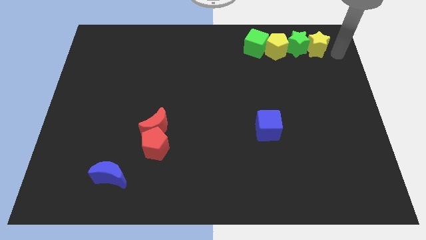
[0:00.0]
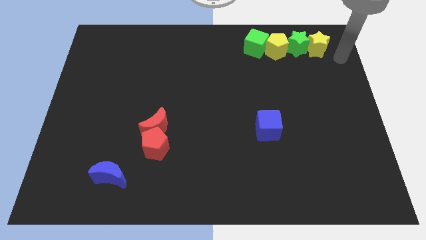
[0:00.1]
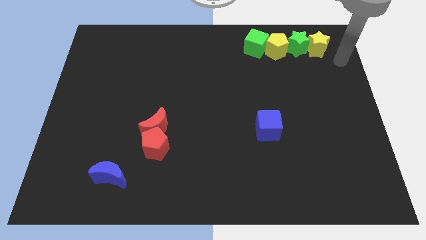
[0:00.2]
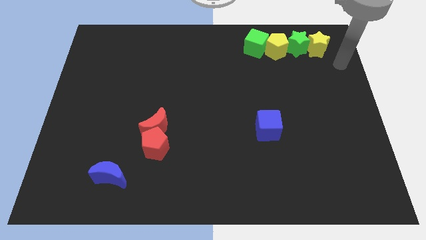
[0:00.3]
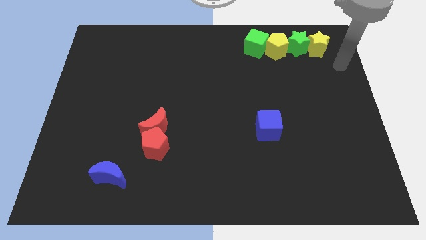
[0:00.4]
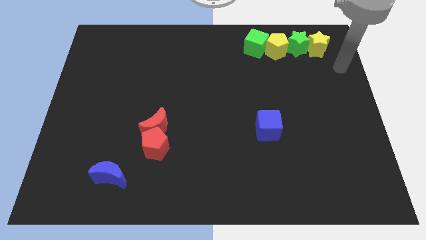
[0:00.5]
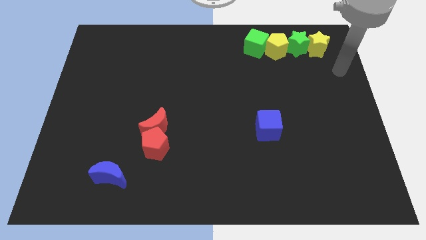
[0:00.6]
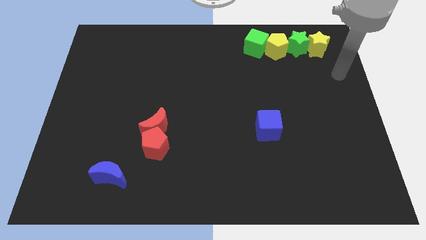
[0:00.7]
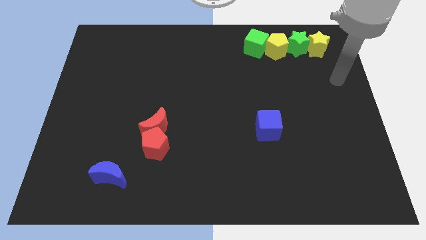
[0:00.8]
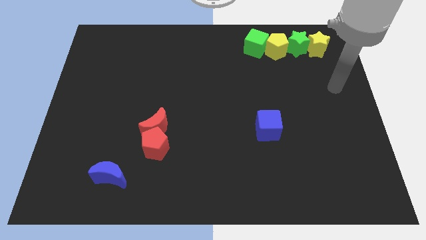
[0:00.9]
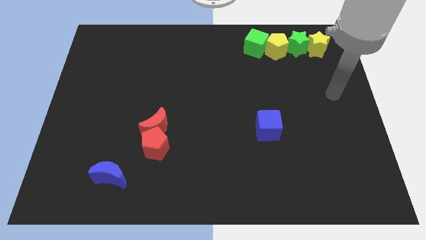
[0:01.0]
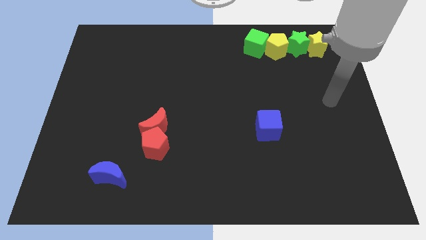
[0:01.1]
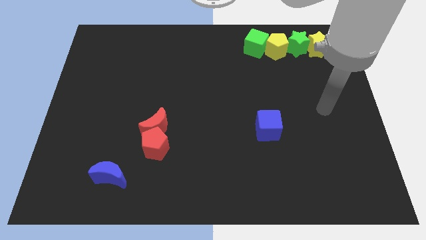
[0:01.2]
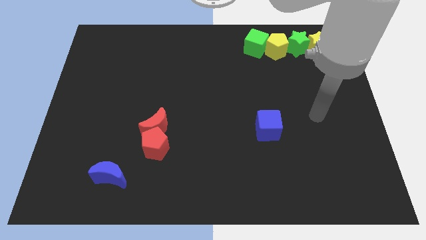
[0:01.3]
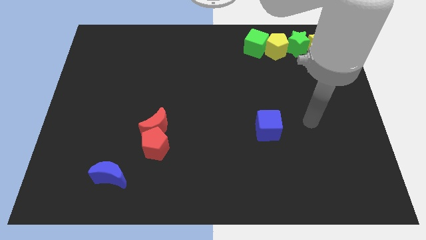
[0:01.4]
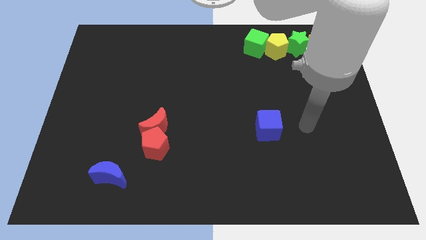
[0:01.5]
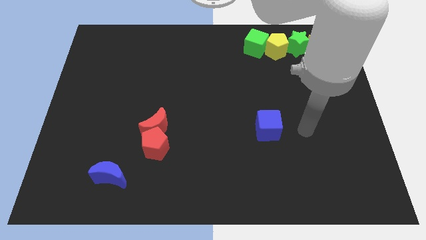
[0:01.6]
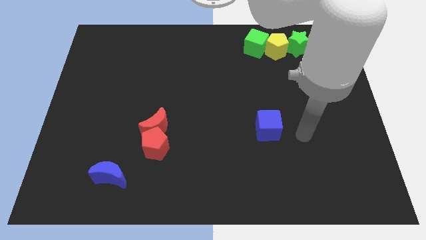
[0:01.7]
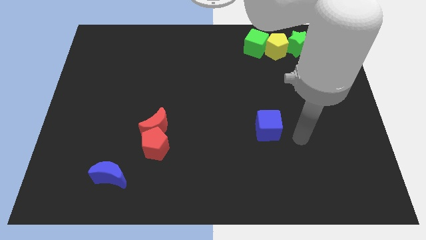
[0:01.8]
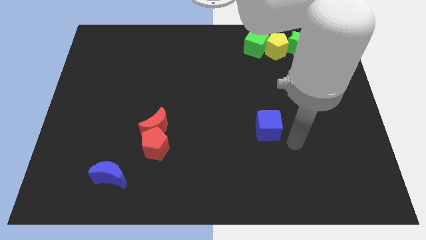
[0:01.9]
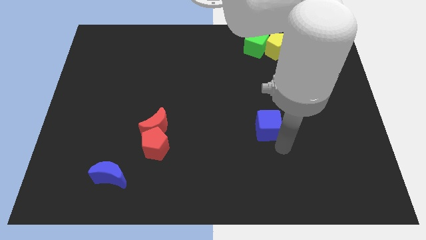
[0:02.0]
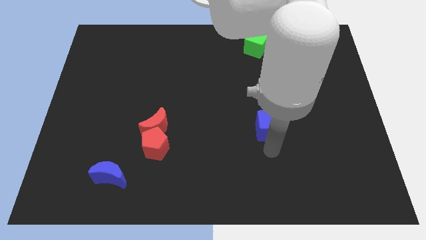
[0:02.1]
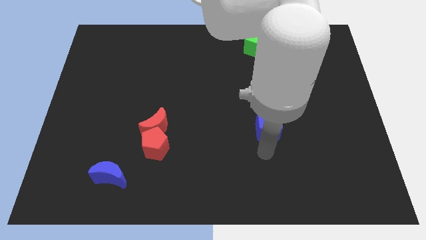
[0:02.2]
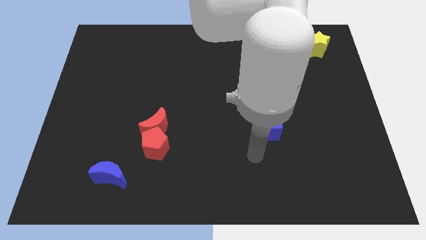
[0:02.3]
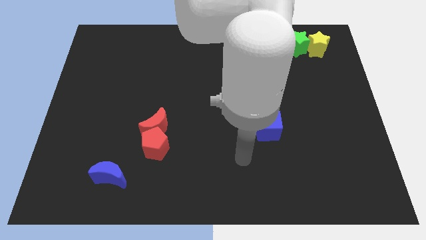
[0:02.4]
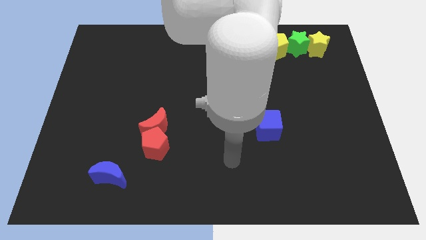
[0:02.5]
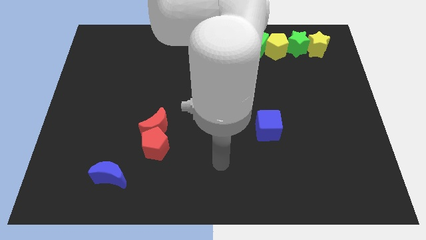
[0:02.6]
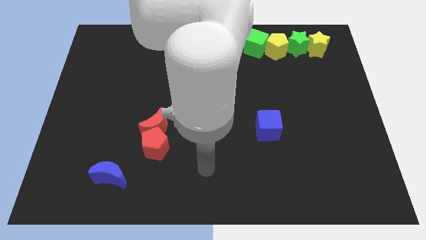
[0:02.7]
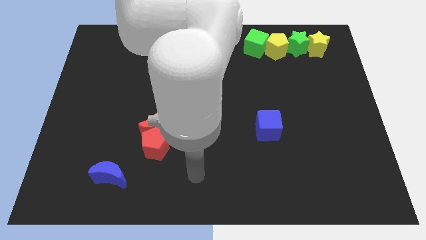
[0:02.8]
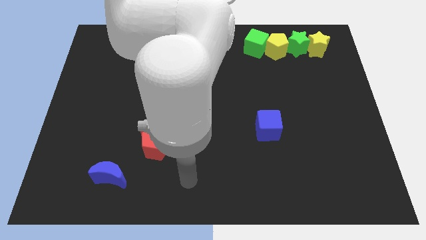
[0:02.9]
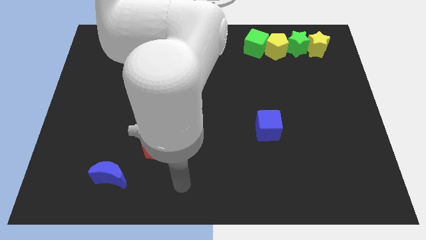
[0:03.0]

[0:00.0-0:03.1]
move your arm to the bottom center of the board

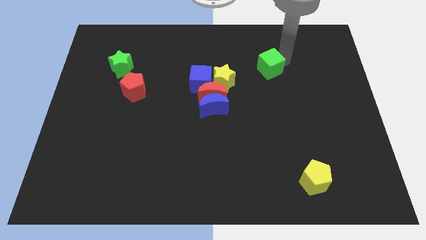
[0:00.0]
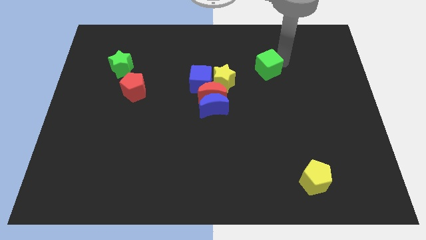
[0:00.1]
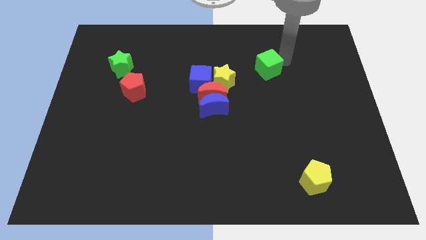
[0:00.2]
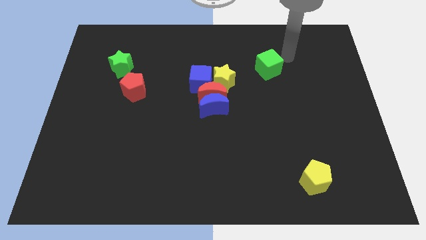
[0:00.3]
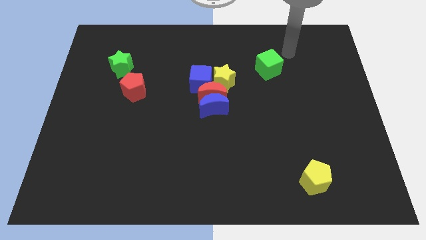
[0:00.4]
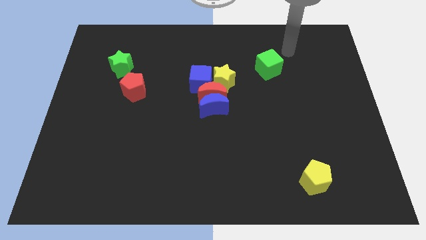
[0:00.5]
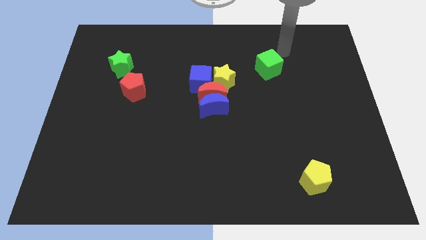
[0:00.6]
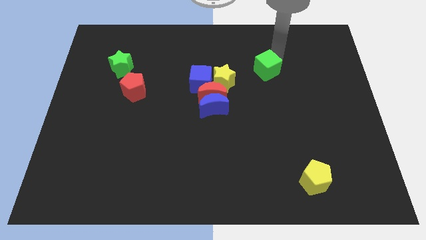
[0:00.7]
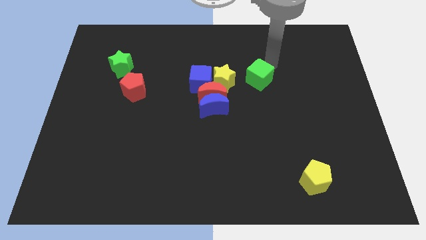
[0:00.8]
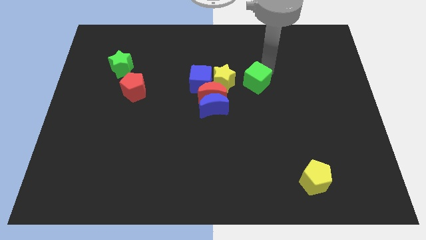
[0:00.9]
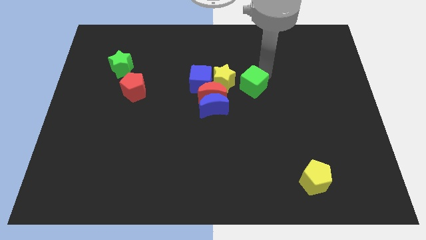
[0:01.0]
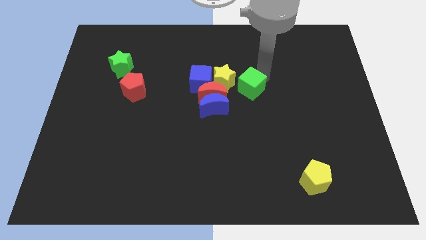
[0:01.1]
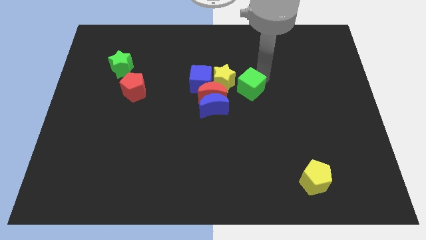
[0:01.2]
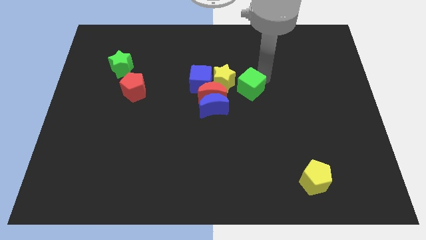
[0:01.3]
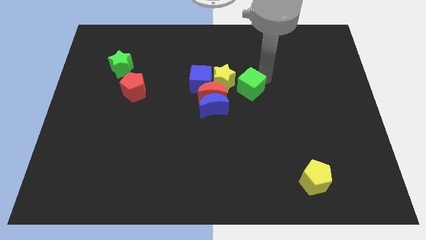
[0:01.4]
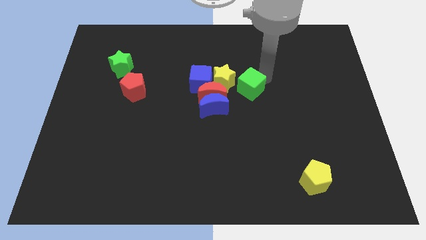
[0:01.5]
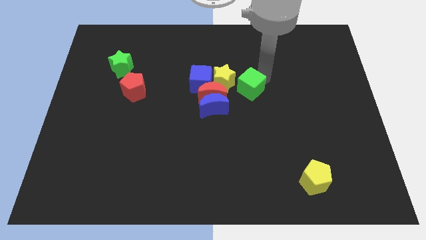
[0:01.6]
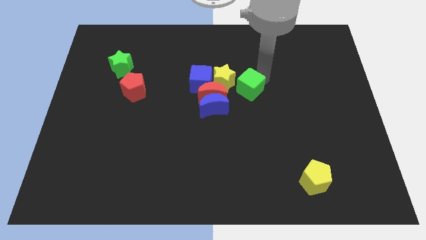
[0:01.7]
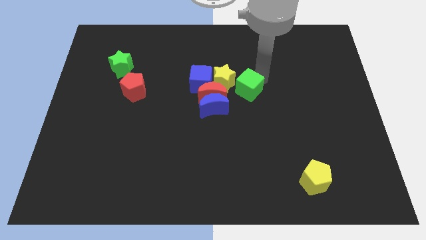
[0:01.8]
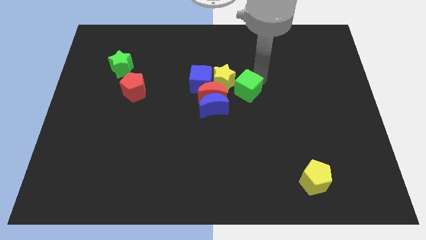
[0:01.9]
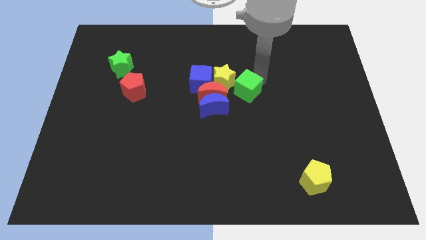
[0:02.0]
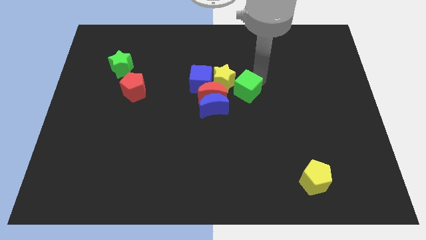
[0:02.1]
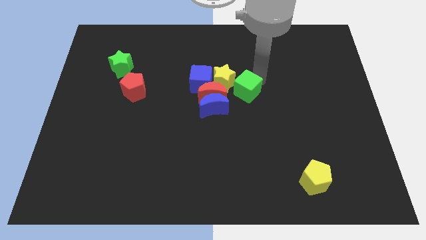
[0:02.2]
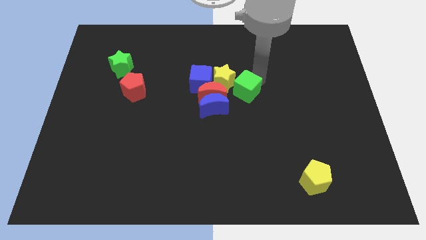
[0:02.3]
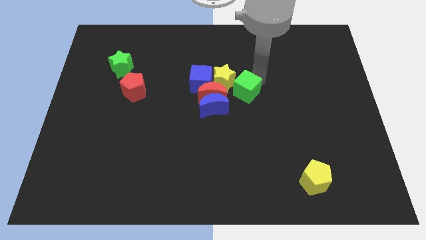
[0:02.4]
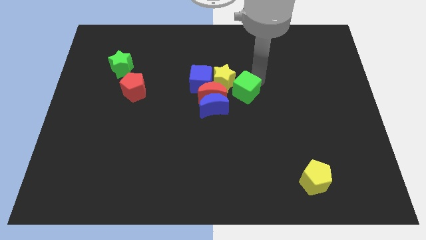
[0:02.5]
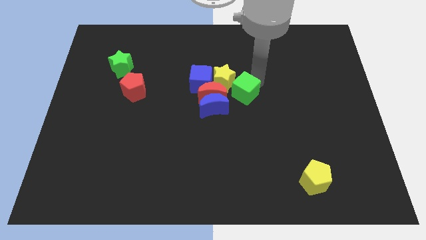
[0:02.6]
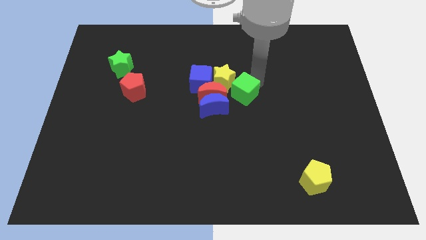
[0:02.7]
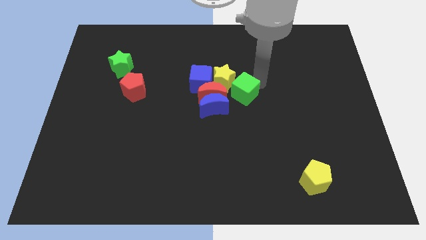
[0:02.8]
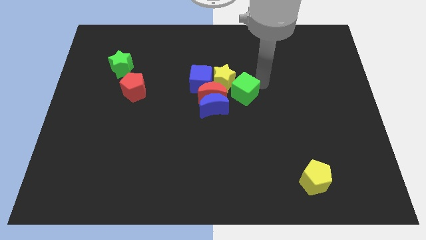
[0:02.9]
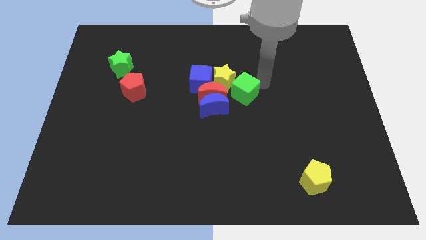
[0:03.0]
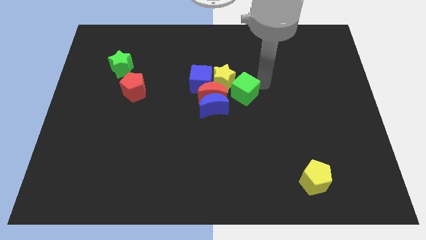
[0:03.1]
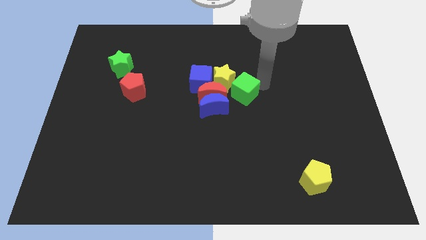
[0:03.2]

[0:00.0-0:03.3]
move green block towards the right of red crescent

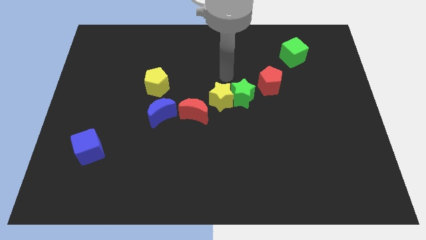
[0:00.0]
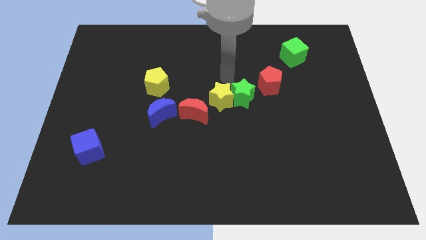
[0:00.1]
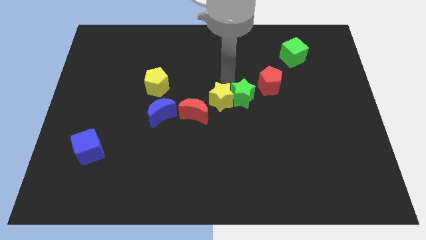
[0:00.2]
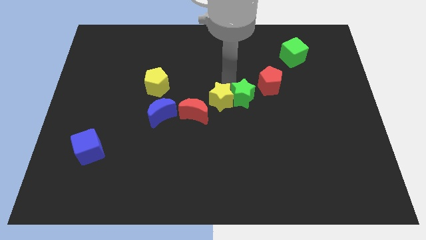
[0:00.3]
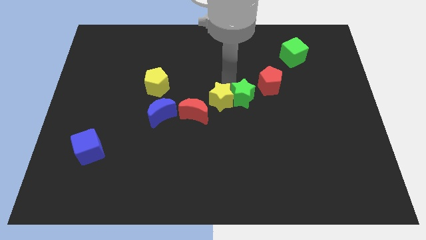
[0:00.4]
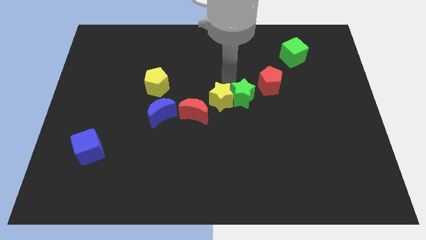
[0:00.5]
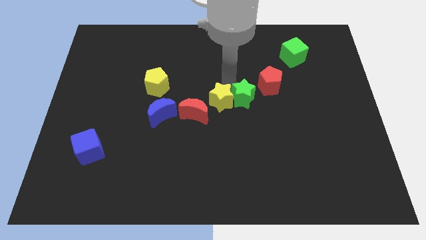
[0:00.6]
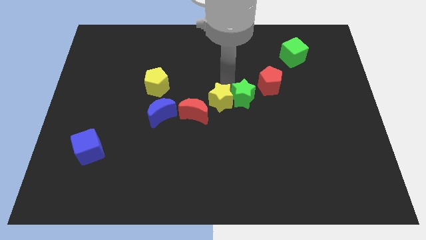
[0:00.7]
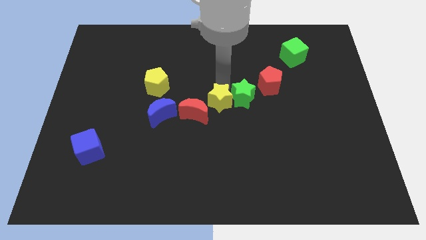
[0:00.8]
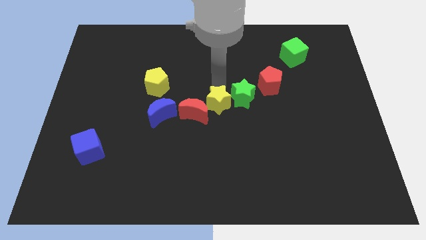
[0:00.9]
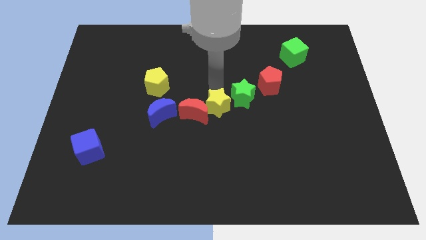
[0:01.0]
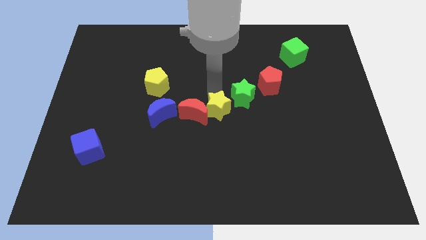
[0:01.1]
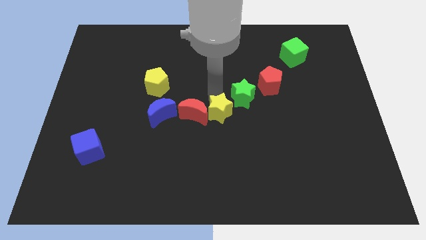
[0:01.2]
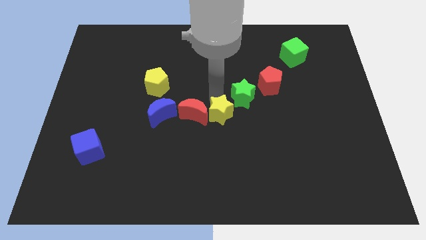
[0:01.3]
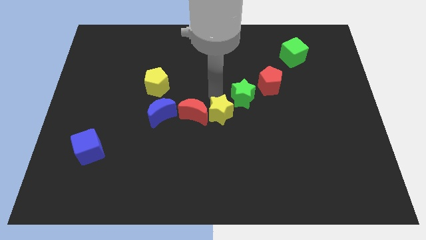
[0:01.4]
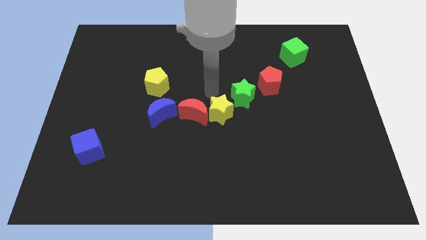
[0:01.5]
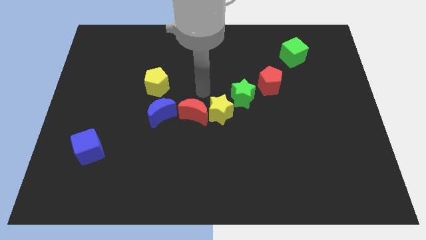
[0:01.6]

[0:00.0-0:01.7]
separate the yellow star from the green star

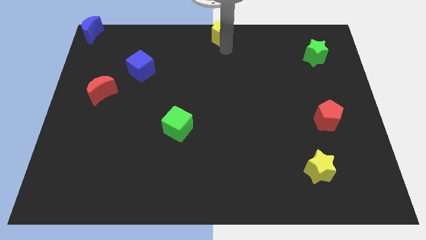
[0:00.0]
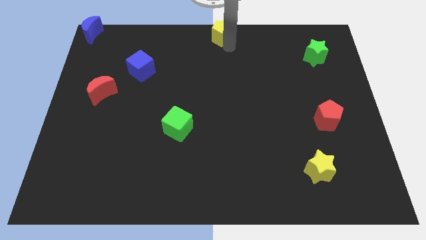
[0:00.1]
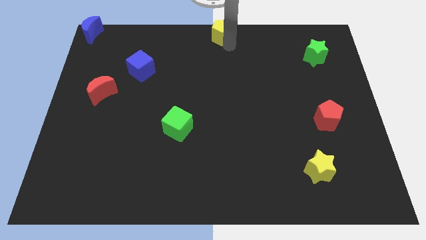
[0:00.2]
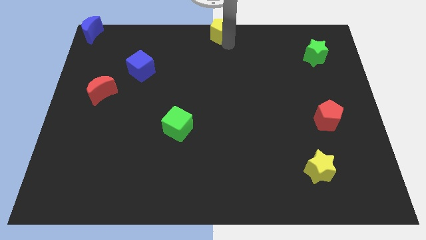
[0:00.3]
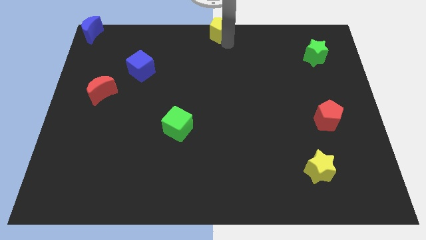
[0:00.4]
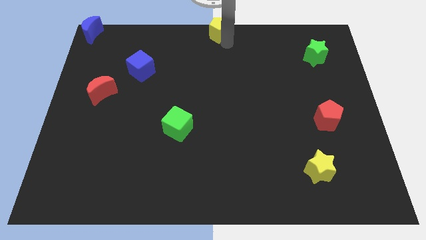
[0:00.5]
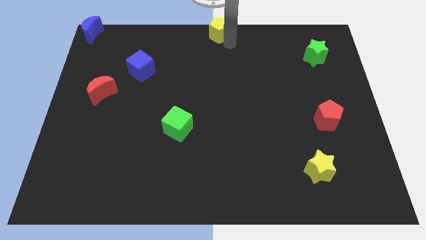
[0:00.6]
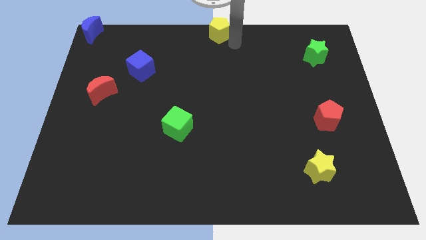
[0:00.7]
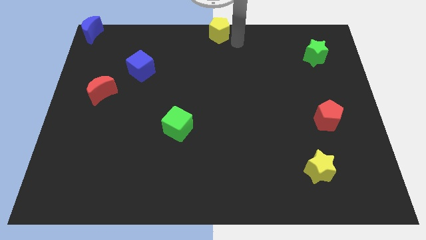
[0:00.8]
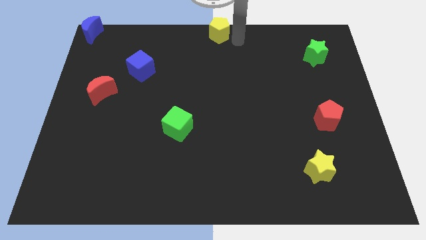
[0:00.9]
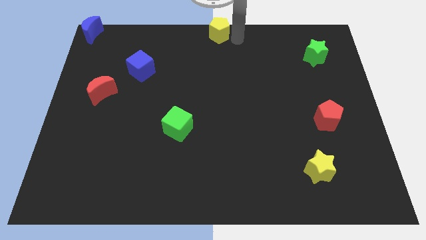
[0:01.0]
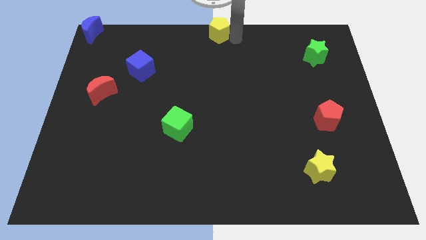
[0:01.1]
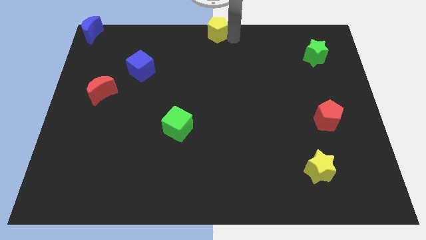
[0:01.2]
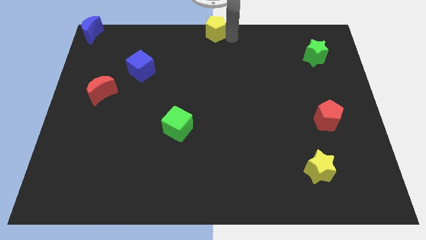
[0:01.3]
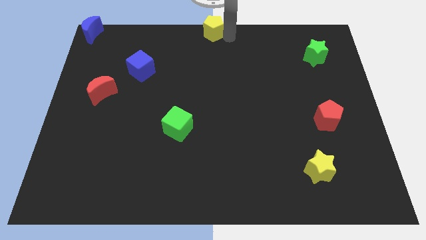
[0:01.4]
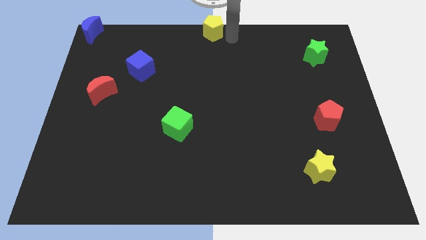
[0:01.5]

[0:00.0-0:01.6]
place the yellow pentagon at the top center of the table
